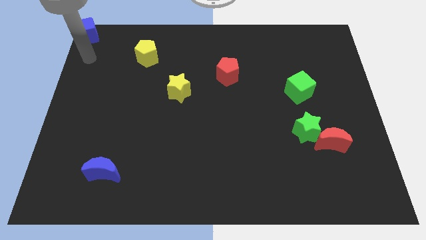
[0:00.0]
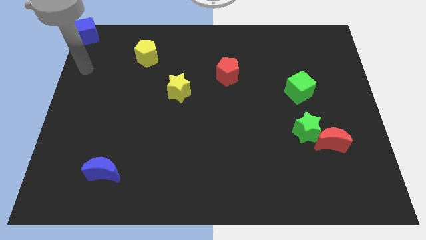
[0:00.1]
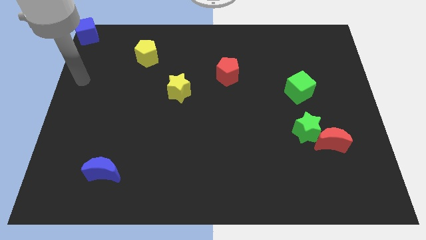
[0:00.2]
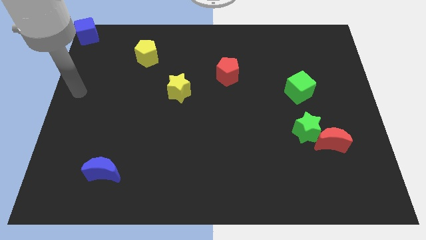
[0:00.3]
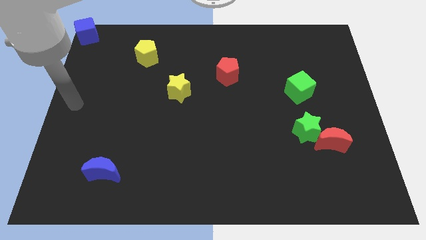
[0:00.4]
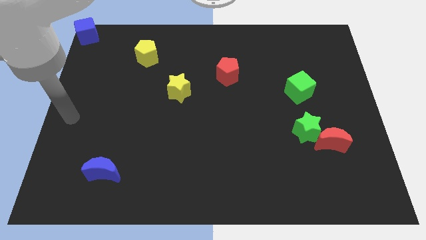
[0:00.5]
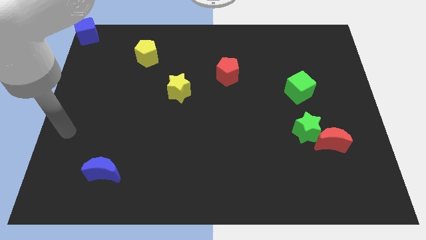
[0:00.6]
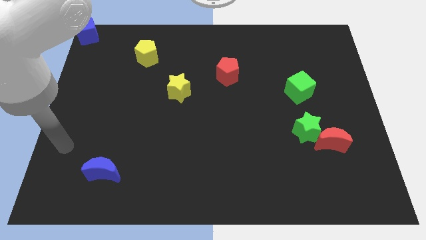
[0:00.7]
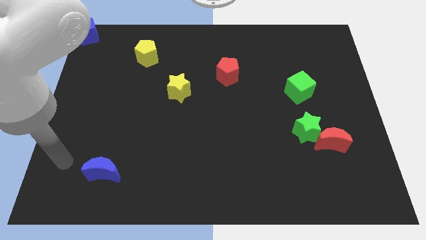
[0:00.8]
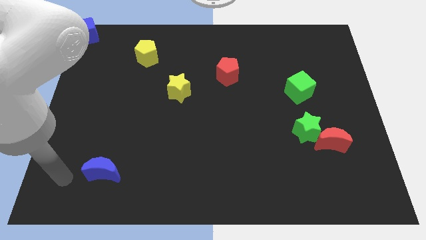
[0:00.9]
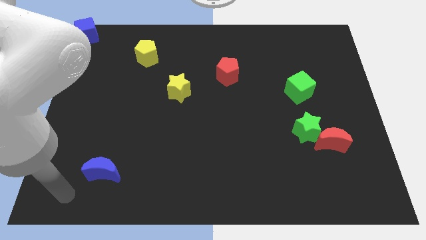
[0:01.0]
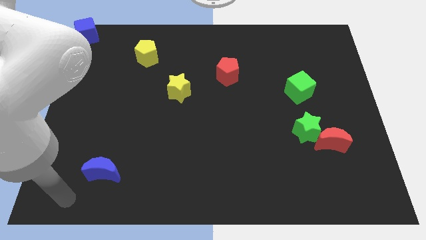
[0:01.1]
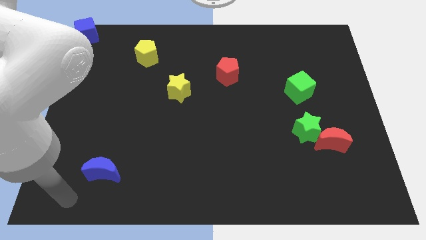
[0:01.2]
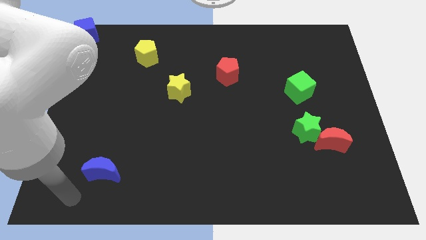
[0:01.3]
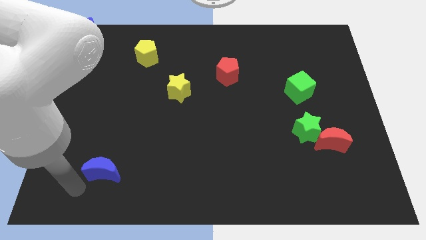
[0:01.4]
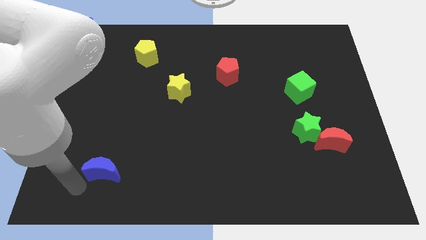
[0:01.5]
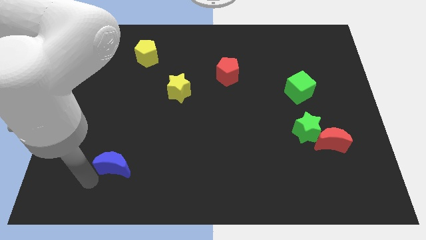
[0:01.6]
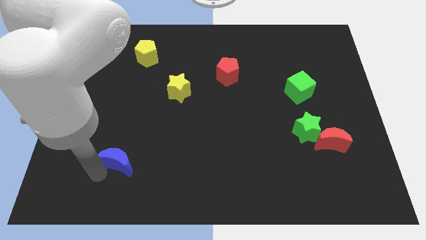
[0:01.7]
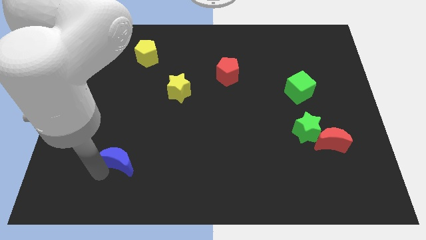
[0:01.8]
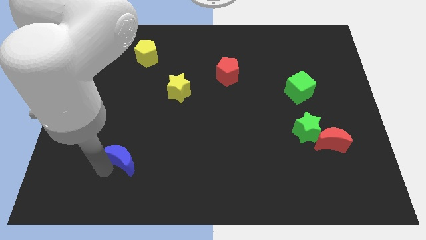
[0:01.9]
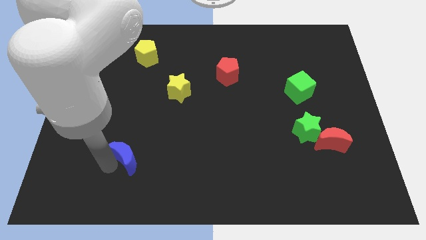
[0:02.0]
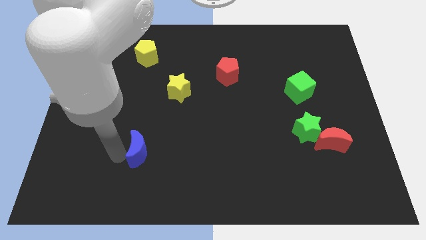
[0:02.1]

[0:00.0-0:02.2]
slightly push the blue crescent

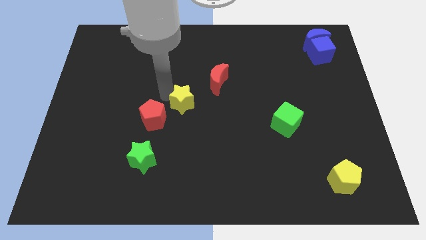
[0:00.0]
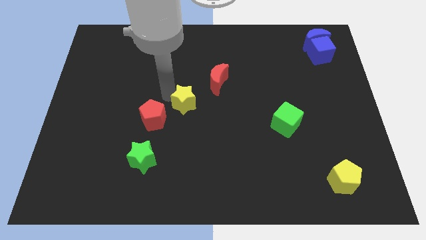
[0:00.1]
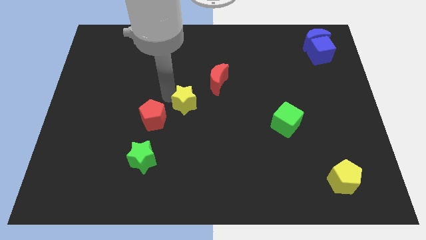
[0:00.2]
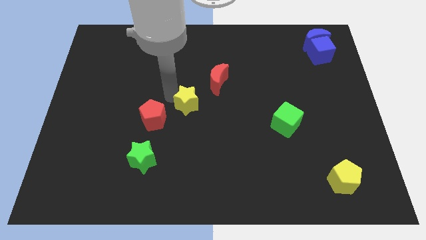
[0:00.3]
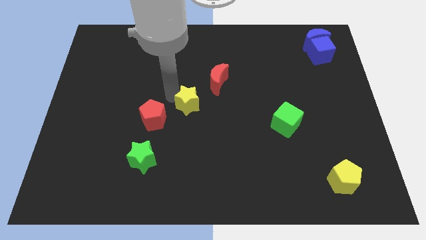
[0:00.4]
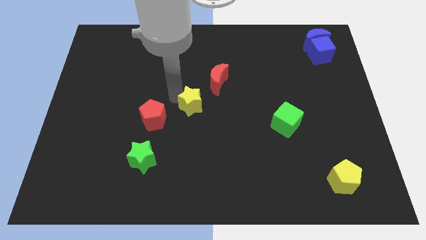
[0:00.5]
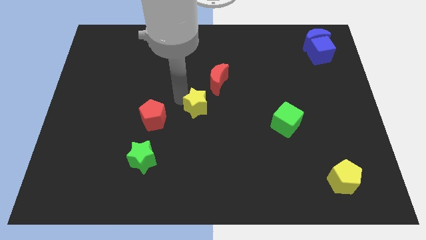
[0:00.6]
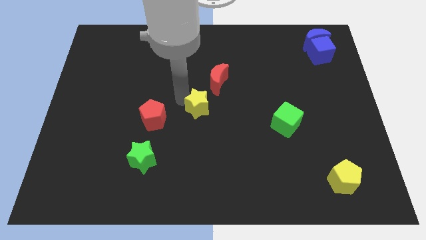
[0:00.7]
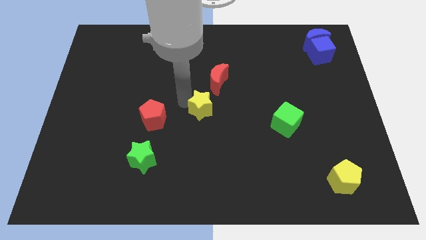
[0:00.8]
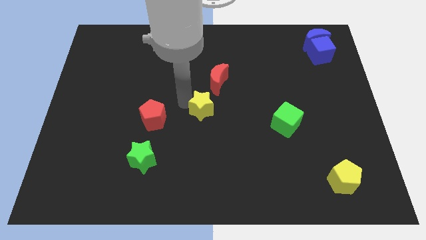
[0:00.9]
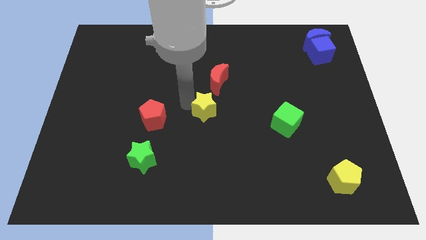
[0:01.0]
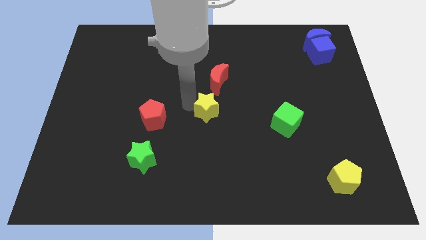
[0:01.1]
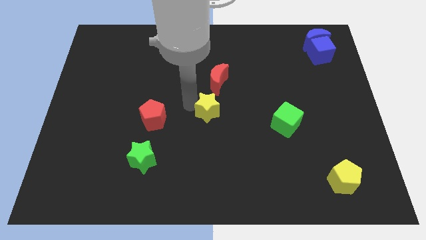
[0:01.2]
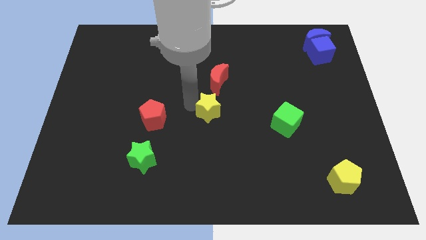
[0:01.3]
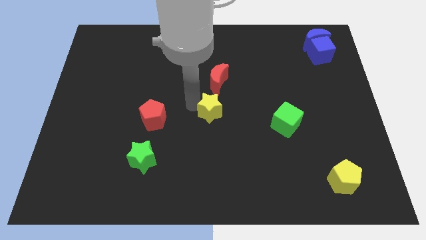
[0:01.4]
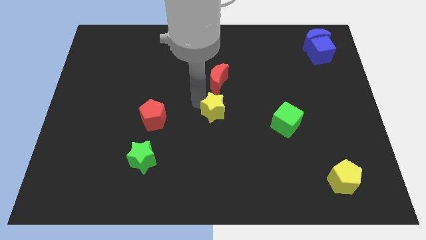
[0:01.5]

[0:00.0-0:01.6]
move the yellow star to the bottom of the red crescent

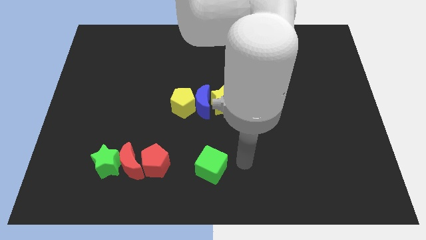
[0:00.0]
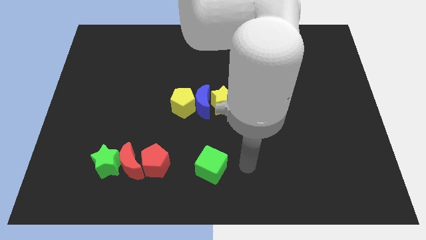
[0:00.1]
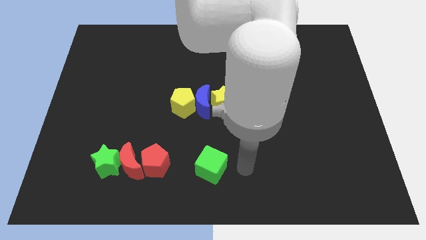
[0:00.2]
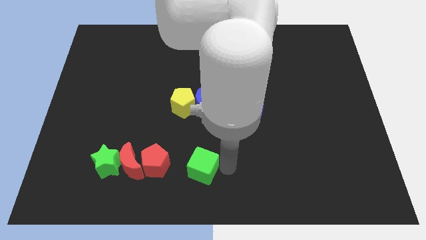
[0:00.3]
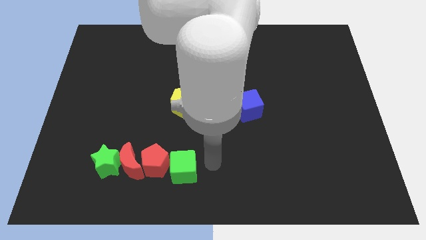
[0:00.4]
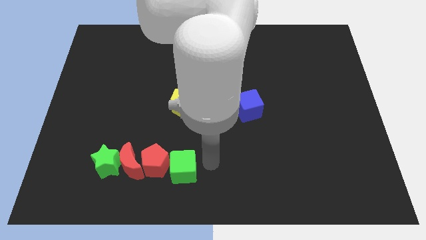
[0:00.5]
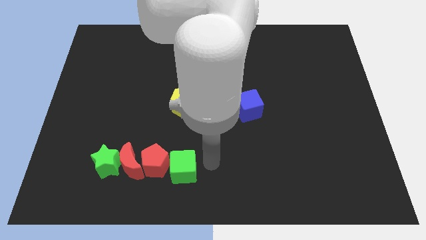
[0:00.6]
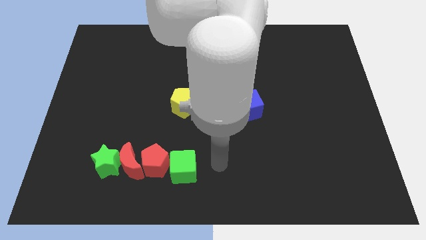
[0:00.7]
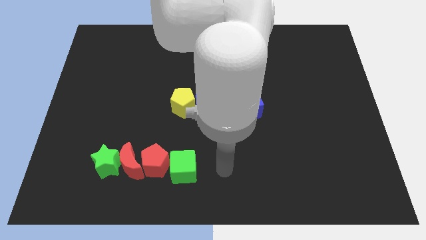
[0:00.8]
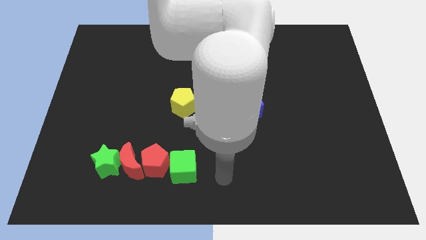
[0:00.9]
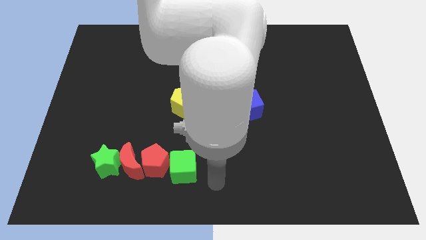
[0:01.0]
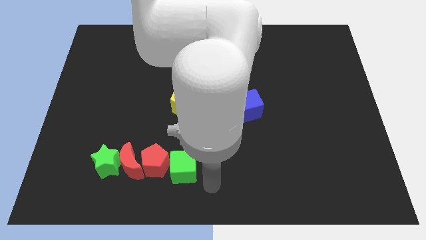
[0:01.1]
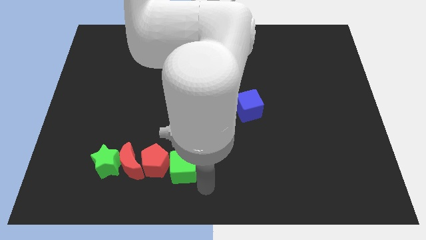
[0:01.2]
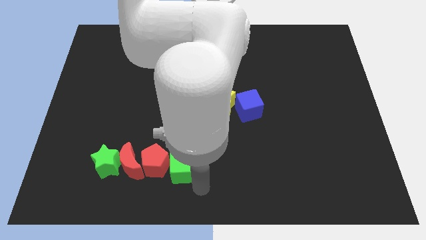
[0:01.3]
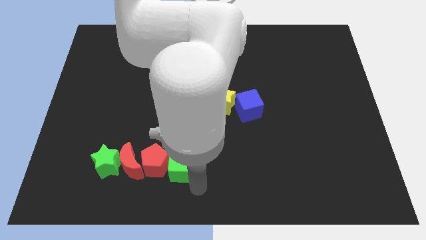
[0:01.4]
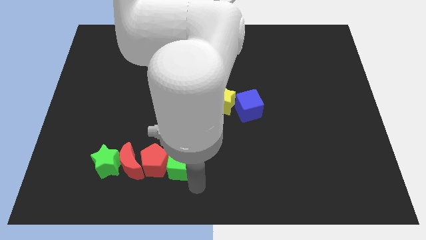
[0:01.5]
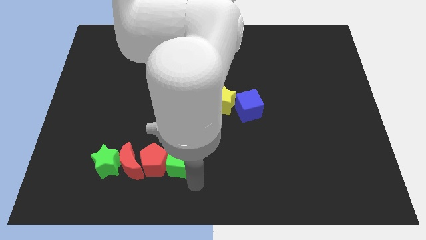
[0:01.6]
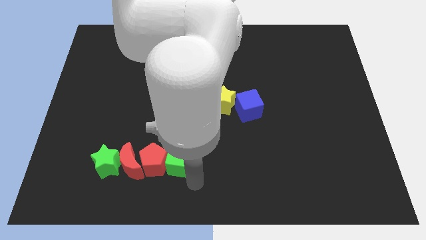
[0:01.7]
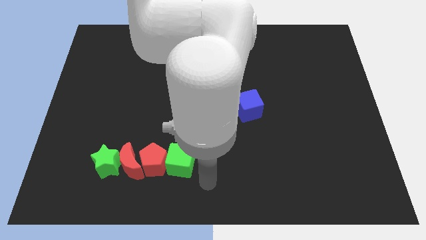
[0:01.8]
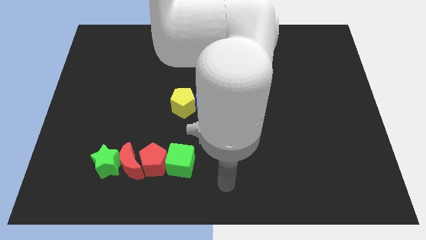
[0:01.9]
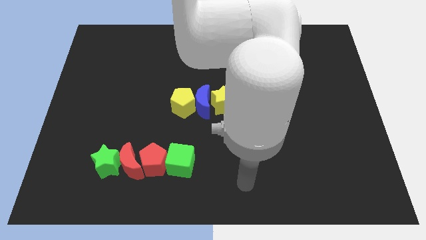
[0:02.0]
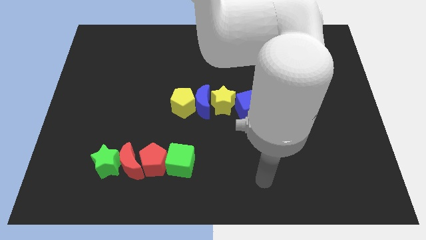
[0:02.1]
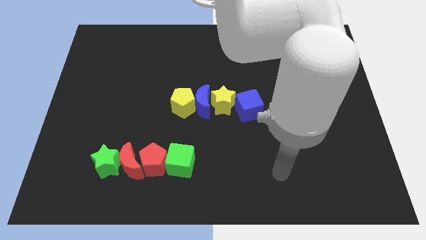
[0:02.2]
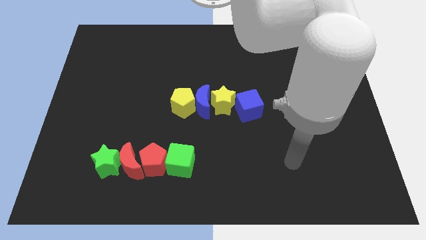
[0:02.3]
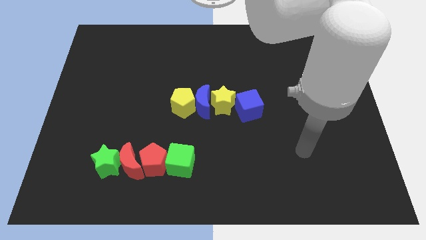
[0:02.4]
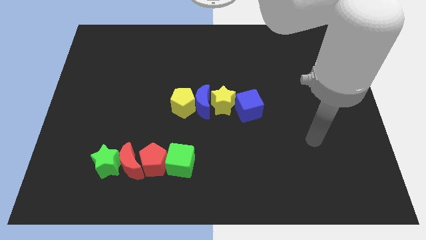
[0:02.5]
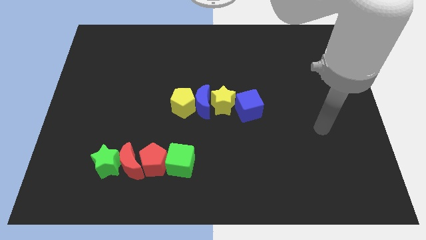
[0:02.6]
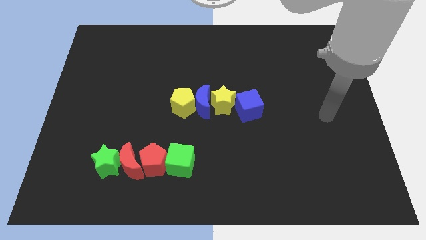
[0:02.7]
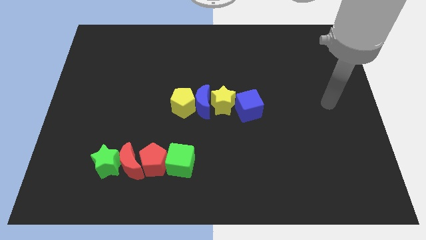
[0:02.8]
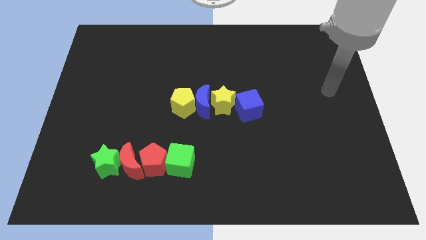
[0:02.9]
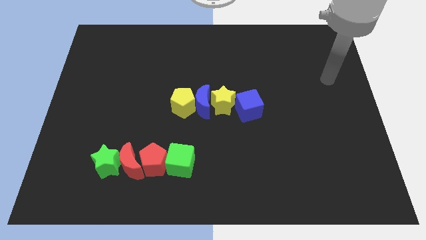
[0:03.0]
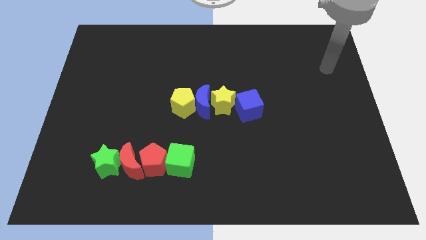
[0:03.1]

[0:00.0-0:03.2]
adjust the green cube close to the red pentagon

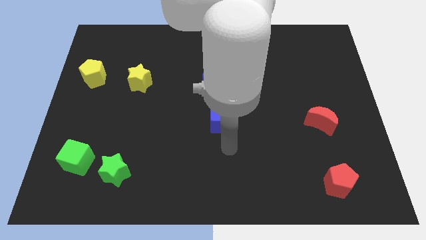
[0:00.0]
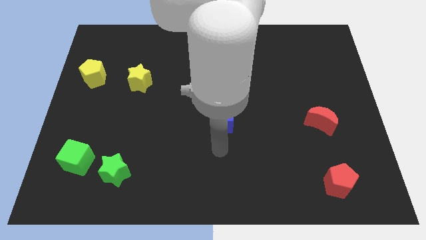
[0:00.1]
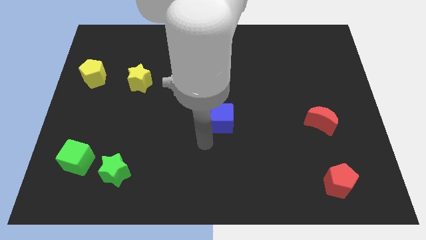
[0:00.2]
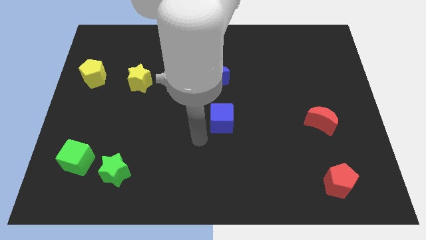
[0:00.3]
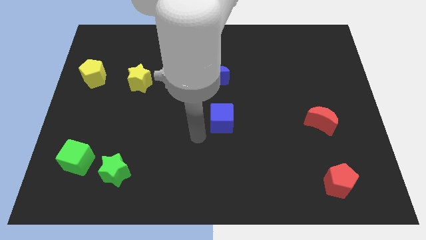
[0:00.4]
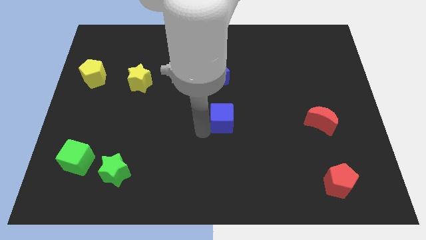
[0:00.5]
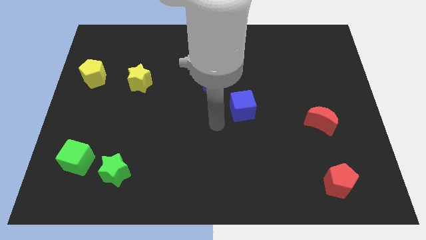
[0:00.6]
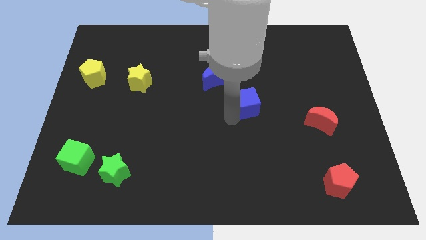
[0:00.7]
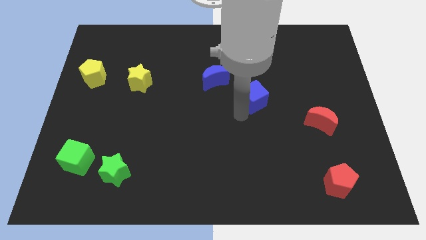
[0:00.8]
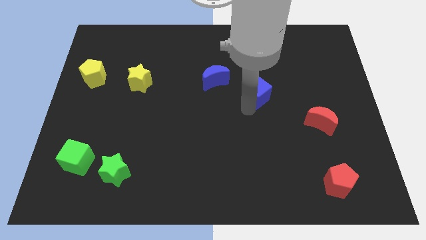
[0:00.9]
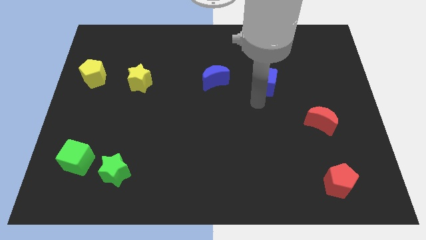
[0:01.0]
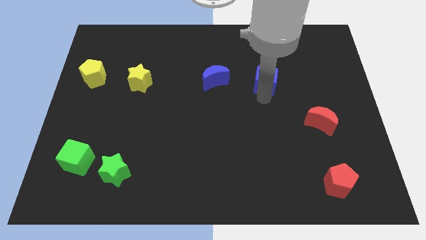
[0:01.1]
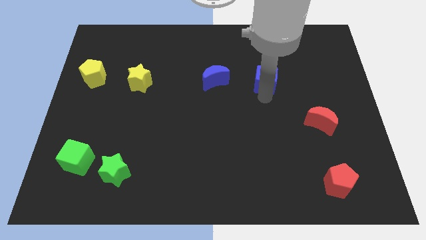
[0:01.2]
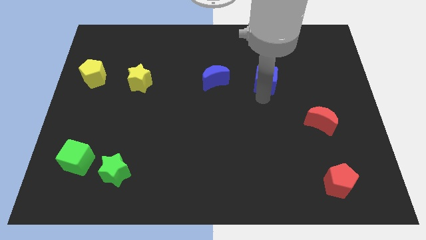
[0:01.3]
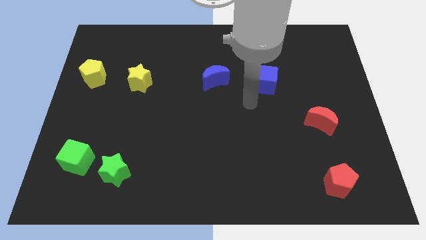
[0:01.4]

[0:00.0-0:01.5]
move blue cube to the right of blue moon

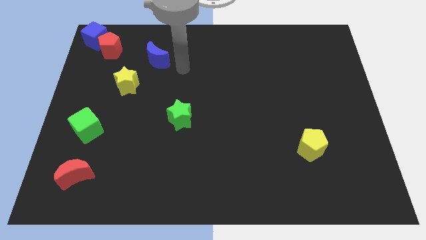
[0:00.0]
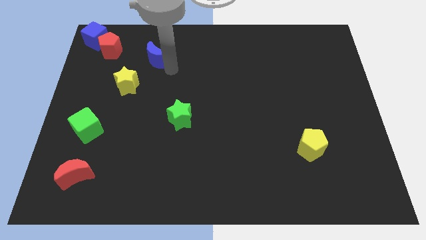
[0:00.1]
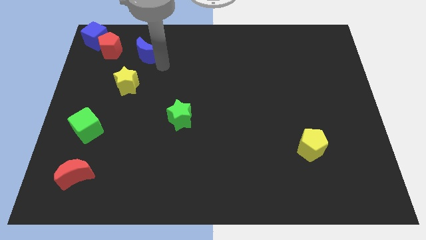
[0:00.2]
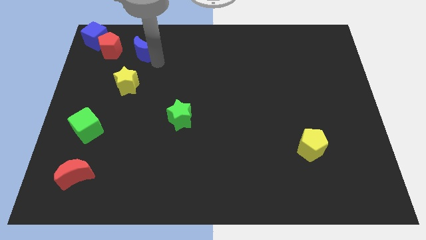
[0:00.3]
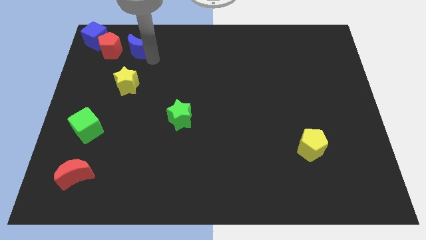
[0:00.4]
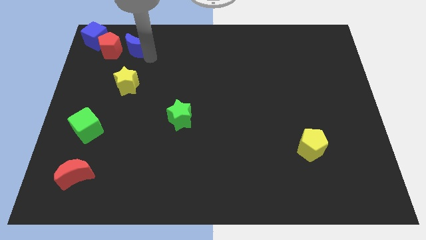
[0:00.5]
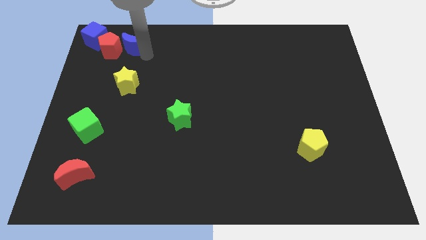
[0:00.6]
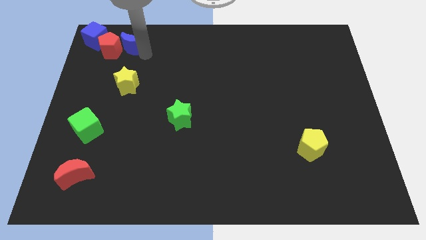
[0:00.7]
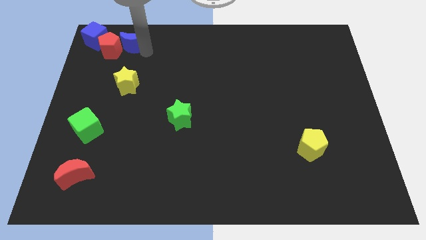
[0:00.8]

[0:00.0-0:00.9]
move the blue crescent to the right of the red pentagon
